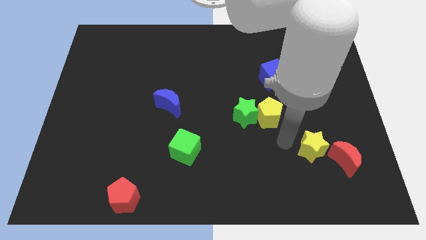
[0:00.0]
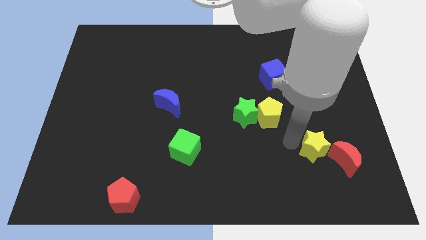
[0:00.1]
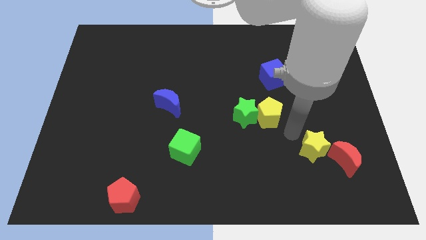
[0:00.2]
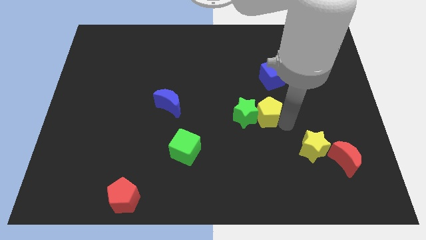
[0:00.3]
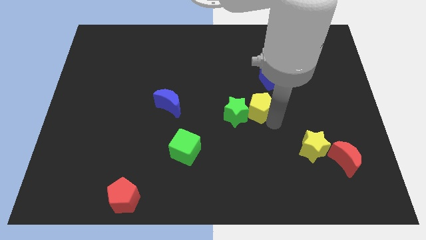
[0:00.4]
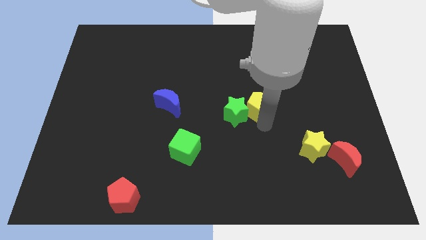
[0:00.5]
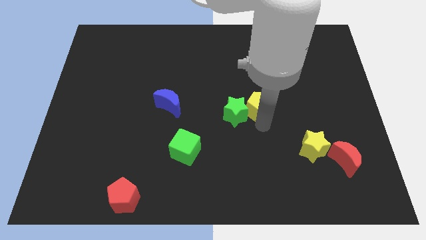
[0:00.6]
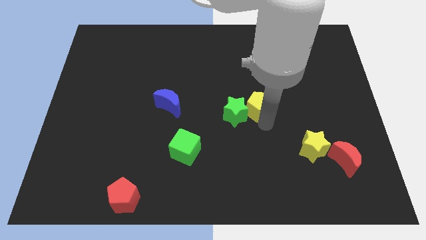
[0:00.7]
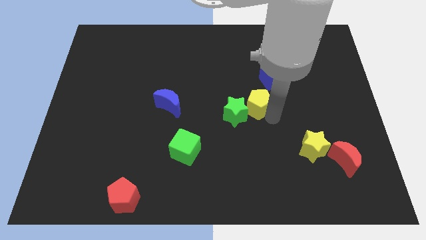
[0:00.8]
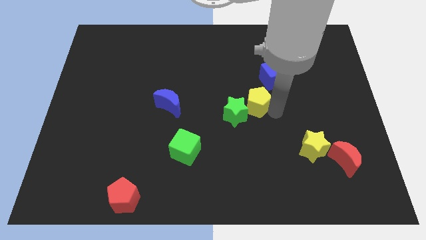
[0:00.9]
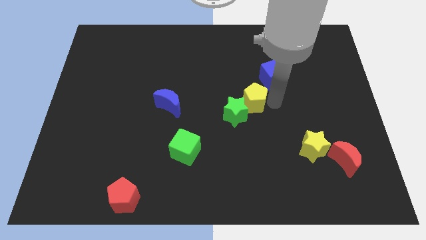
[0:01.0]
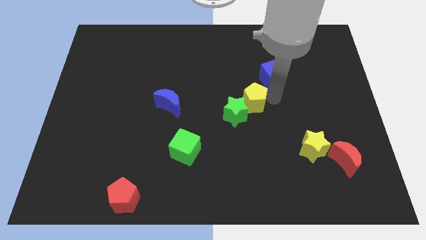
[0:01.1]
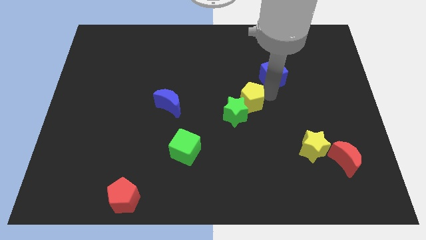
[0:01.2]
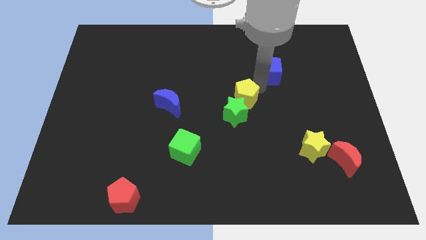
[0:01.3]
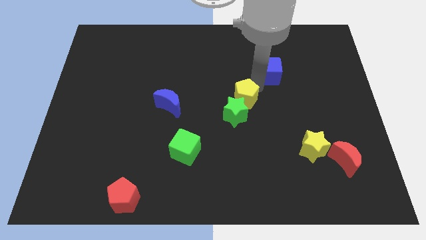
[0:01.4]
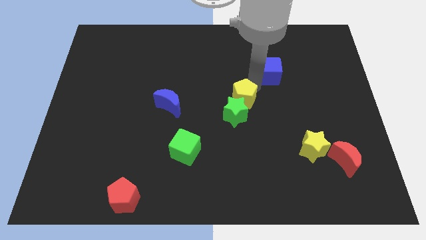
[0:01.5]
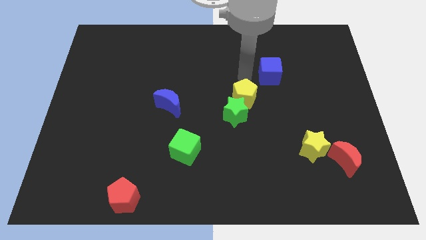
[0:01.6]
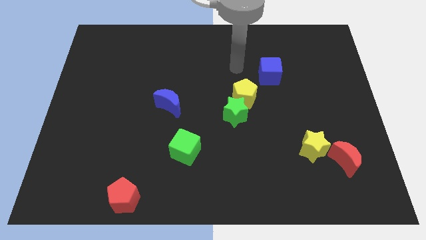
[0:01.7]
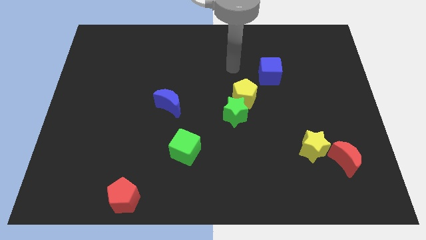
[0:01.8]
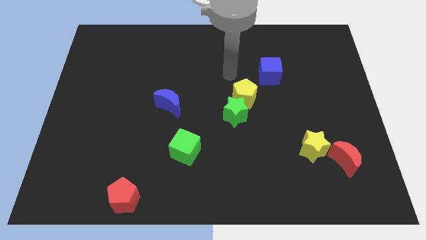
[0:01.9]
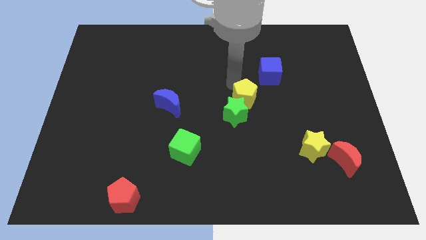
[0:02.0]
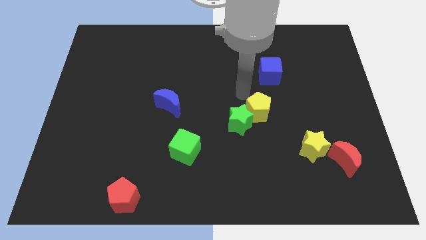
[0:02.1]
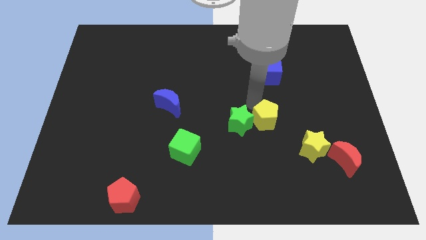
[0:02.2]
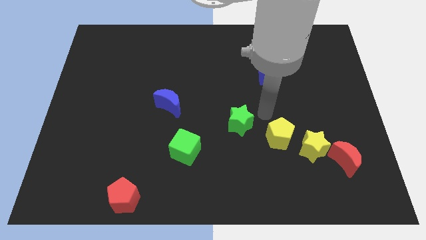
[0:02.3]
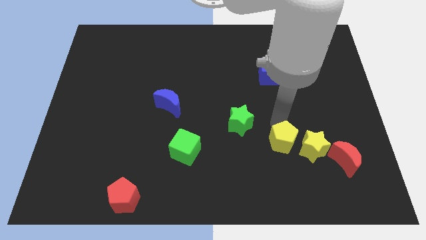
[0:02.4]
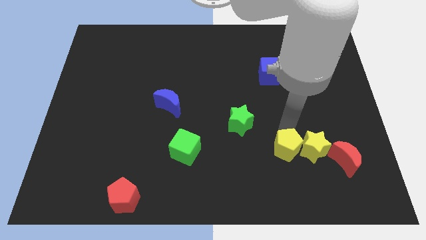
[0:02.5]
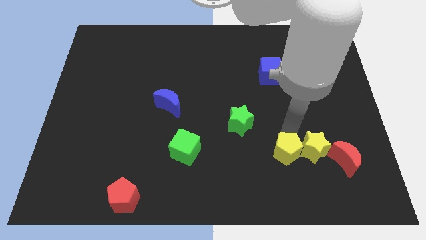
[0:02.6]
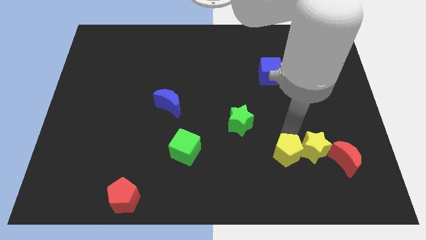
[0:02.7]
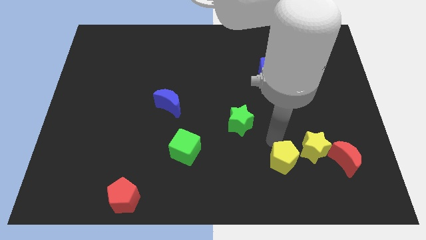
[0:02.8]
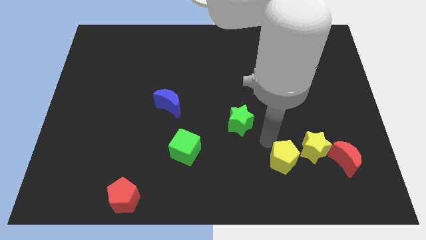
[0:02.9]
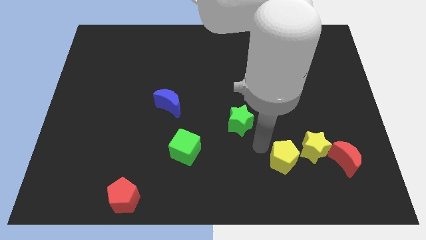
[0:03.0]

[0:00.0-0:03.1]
push yellow pentagon towards yellow star

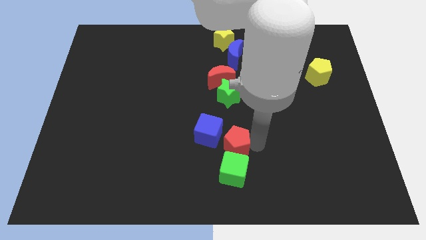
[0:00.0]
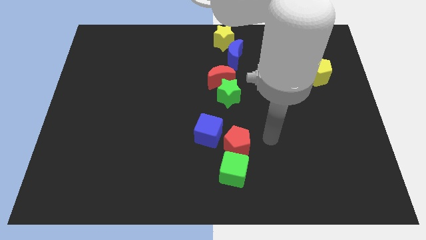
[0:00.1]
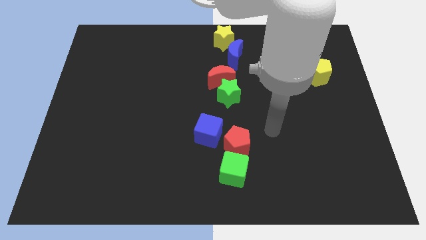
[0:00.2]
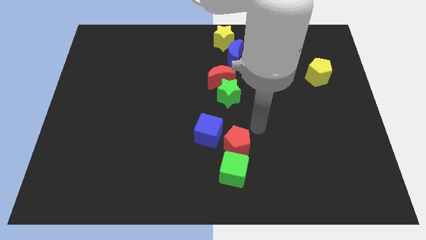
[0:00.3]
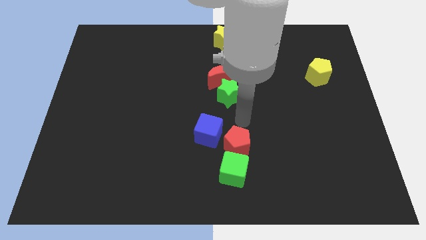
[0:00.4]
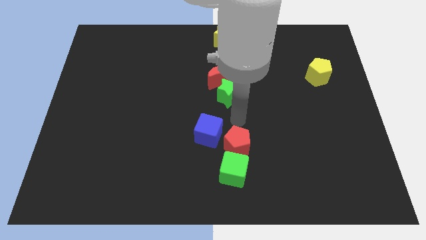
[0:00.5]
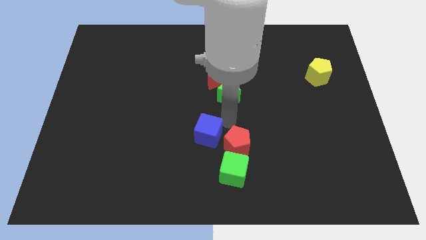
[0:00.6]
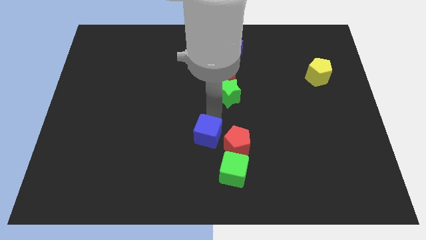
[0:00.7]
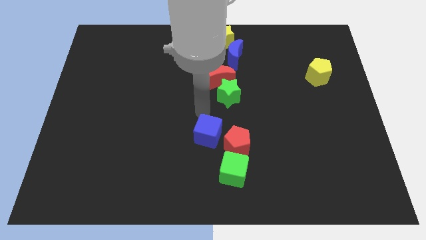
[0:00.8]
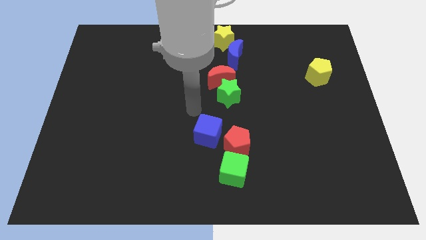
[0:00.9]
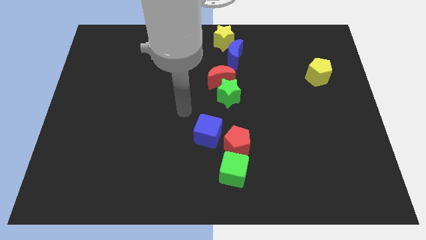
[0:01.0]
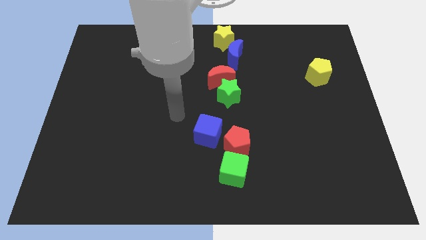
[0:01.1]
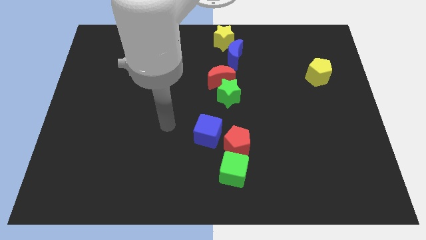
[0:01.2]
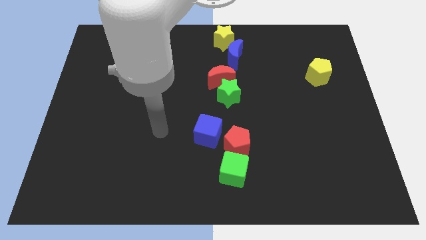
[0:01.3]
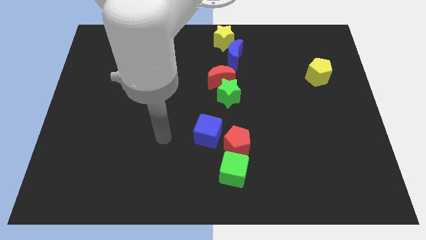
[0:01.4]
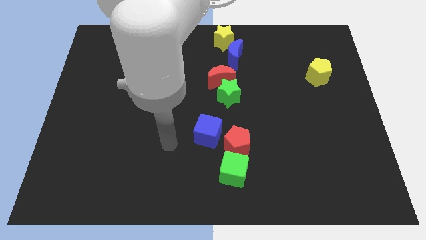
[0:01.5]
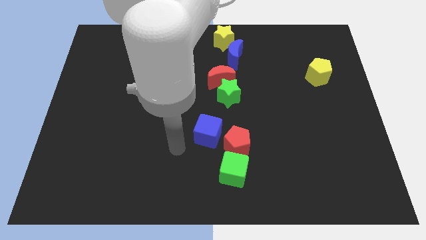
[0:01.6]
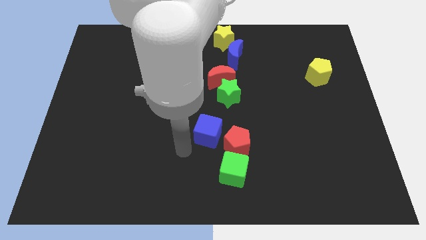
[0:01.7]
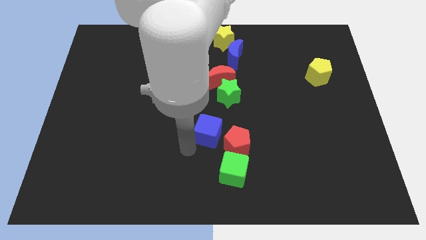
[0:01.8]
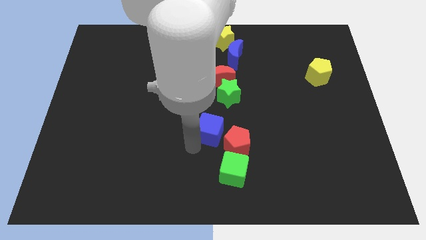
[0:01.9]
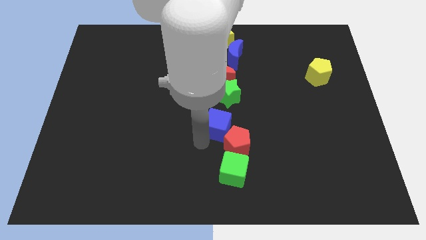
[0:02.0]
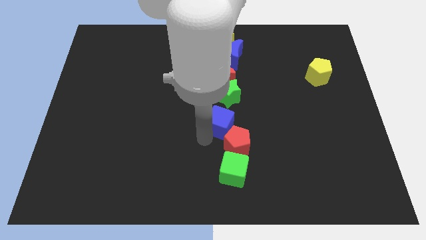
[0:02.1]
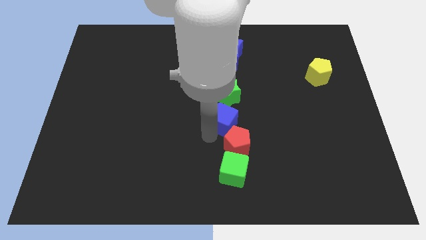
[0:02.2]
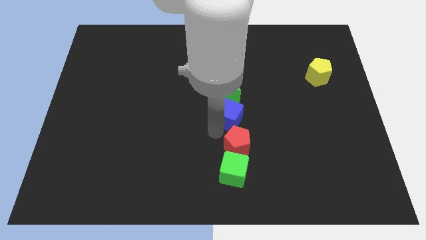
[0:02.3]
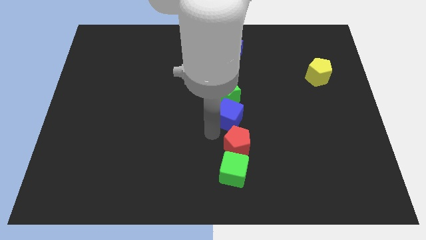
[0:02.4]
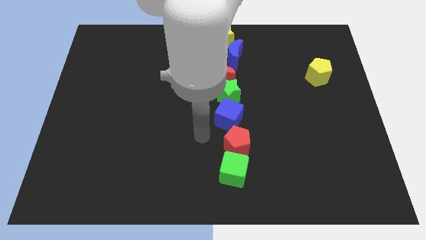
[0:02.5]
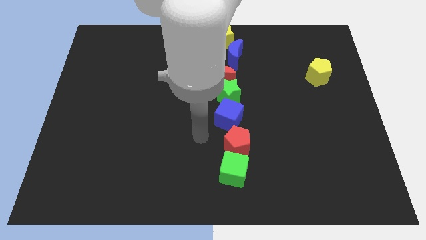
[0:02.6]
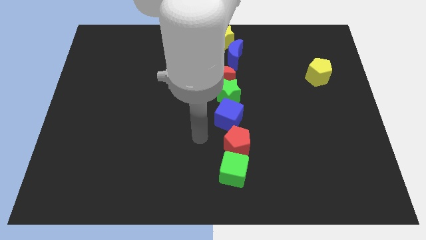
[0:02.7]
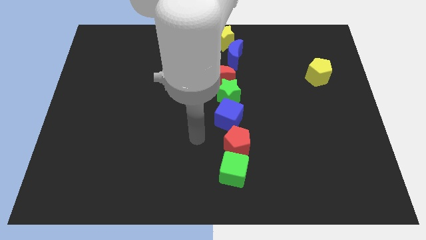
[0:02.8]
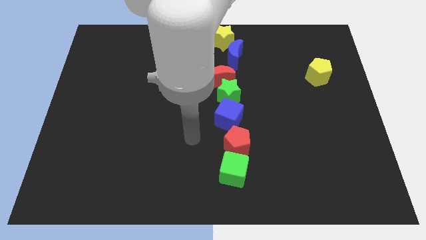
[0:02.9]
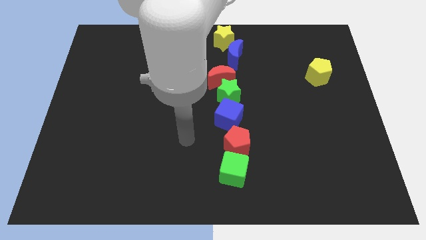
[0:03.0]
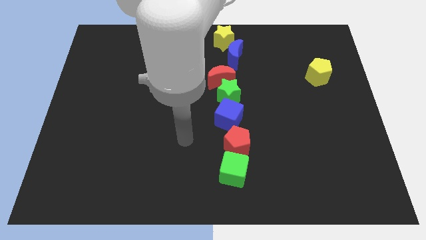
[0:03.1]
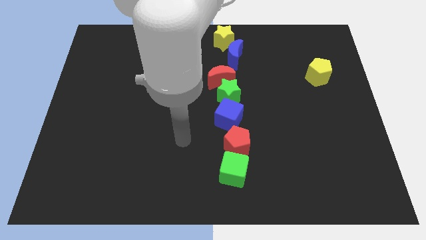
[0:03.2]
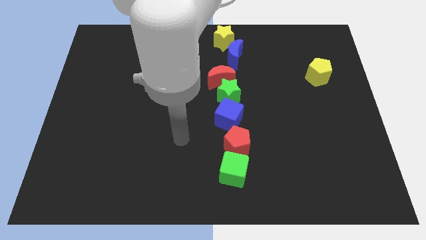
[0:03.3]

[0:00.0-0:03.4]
push the blue cube between red pentagon and green star

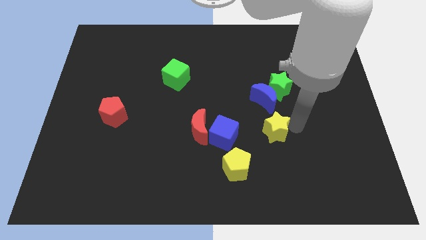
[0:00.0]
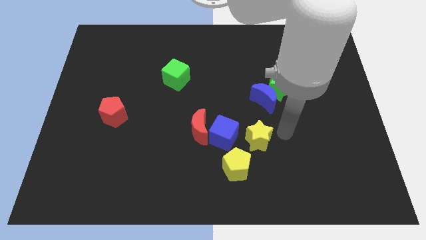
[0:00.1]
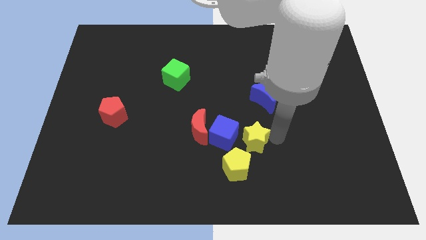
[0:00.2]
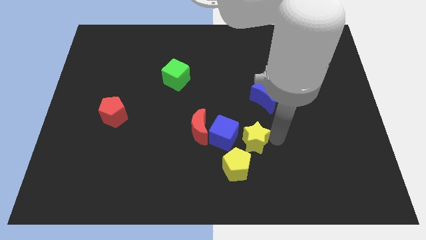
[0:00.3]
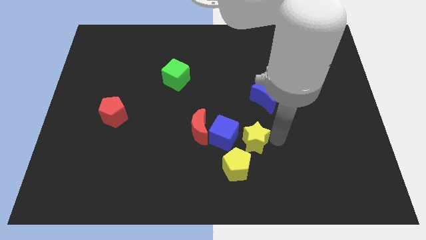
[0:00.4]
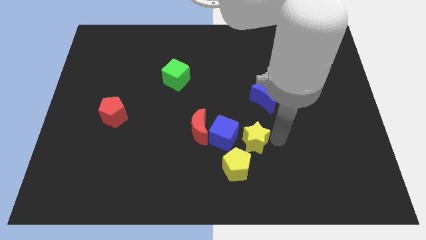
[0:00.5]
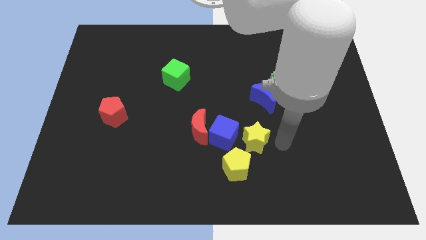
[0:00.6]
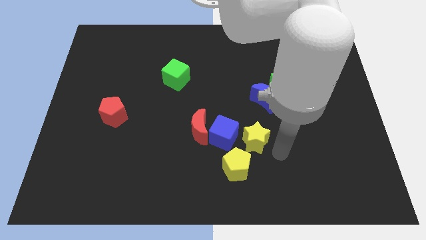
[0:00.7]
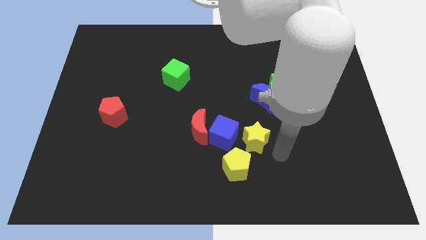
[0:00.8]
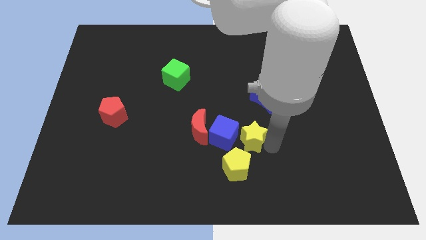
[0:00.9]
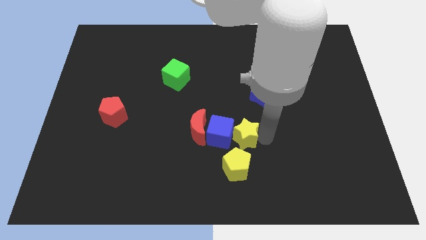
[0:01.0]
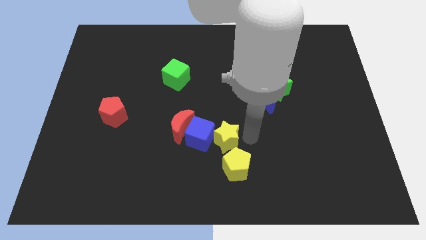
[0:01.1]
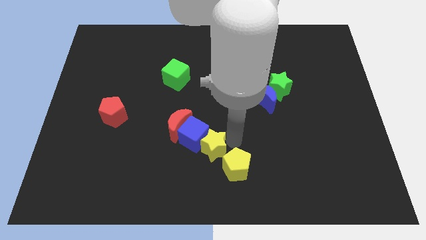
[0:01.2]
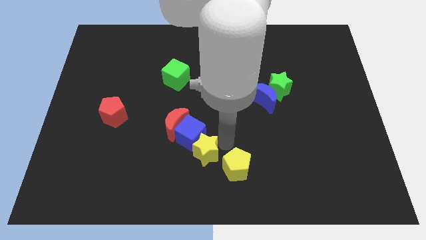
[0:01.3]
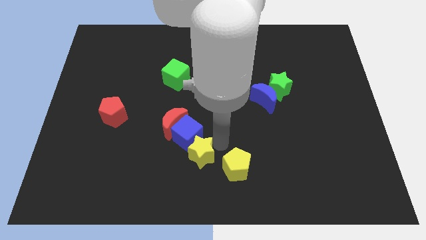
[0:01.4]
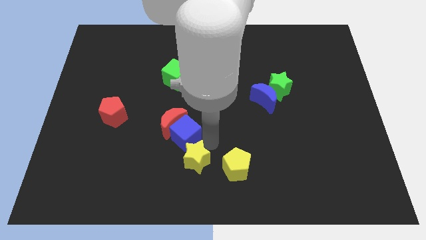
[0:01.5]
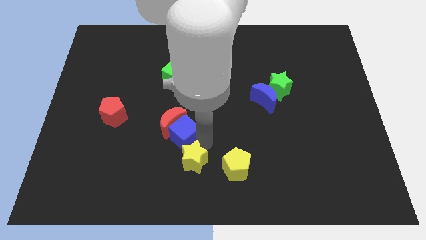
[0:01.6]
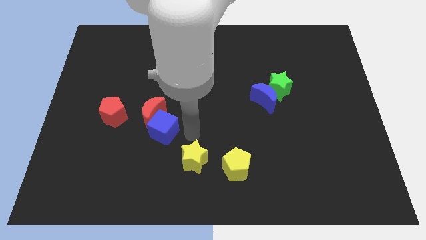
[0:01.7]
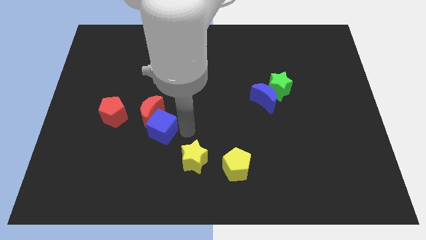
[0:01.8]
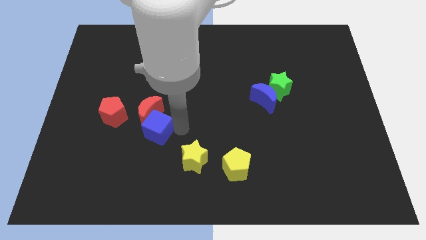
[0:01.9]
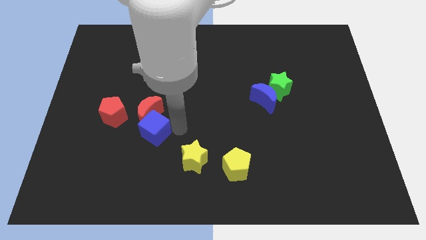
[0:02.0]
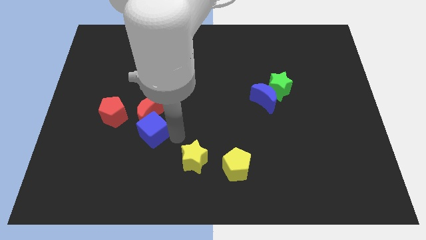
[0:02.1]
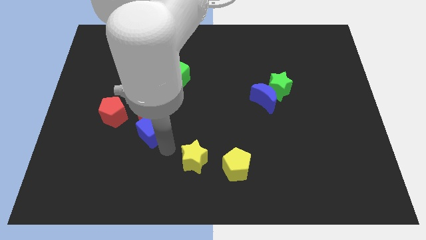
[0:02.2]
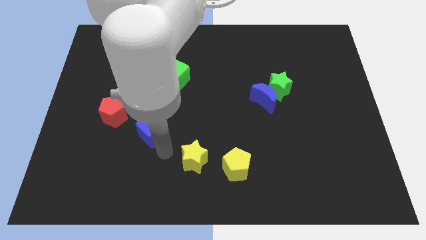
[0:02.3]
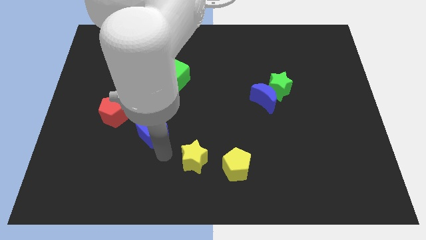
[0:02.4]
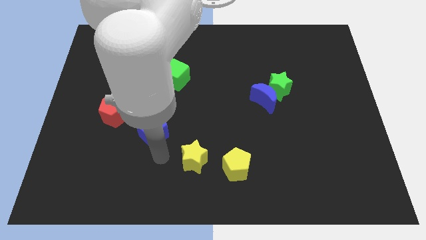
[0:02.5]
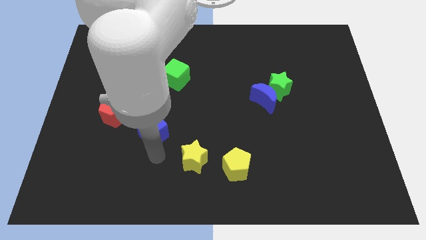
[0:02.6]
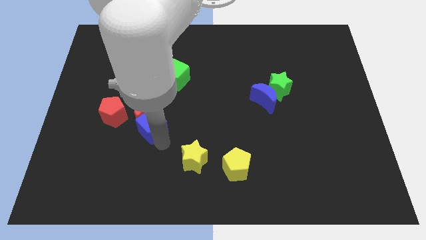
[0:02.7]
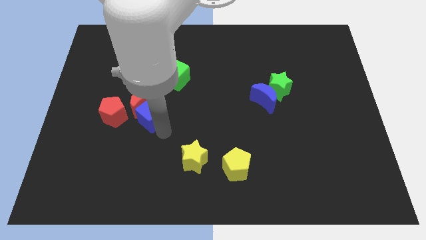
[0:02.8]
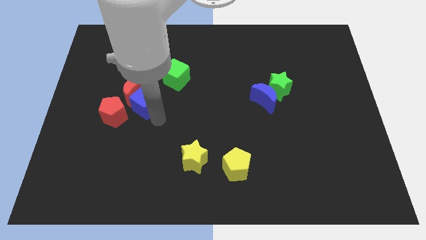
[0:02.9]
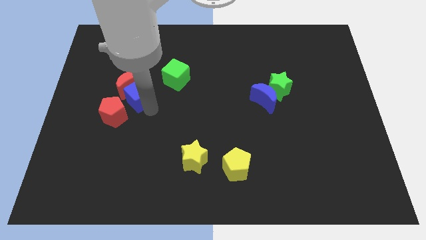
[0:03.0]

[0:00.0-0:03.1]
place the blue cube between the red pentagon and green cube
